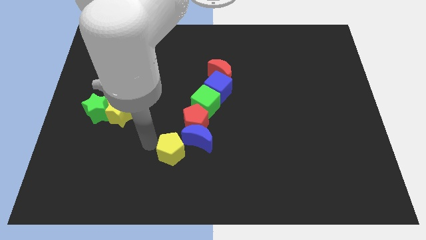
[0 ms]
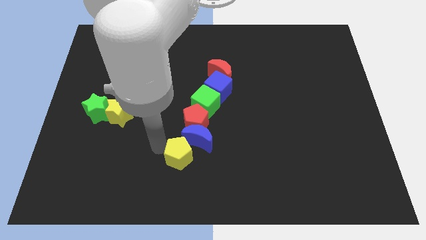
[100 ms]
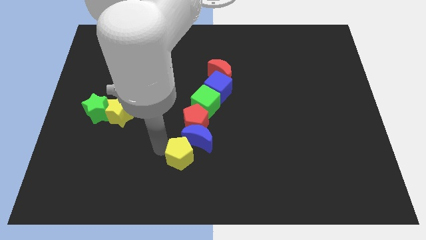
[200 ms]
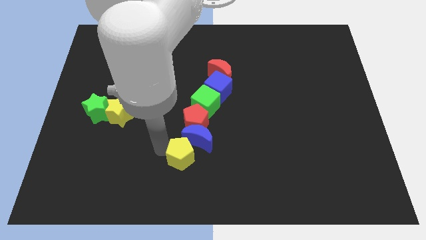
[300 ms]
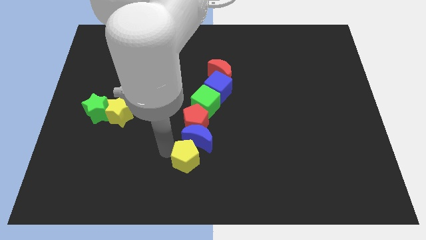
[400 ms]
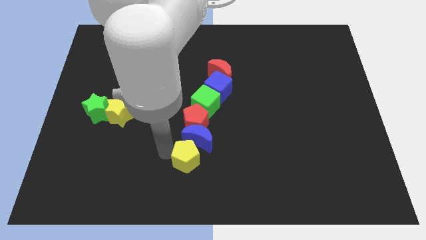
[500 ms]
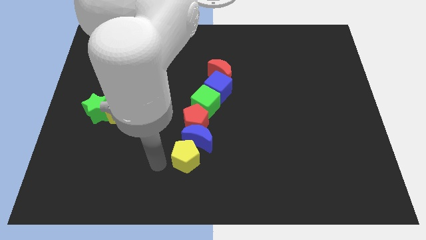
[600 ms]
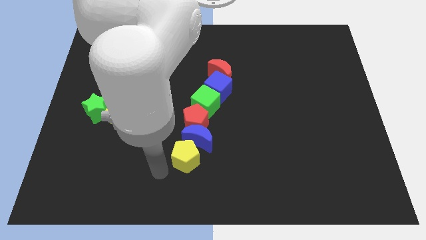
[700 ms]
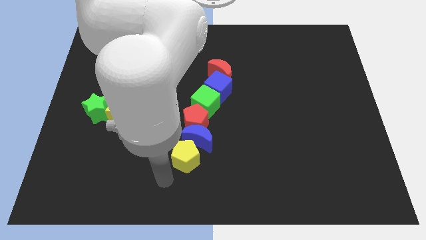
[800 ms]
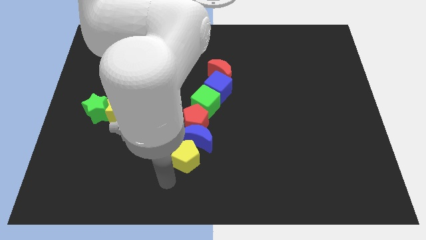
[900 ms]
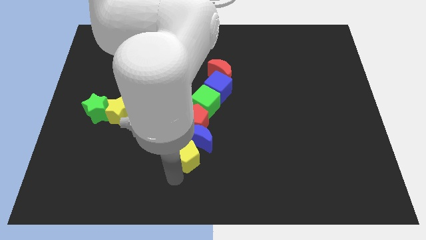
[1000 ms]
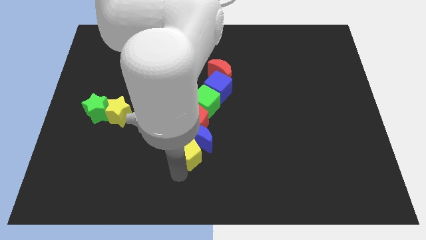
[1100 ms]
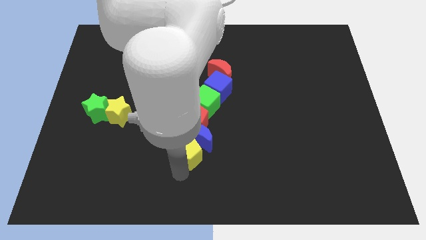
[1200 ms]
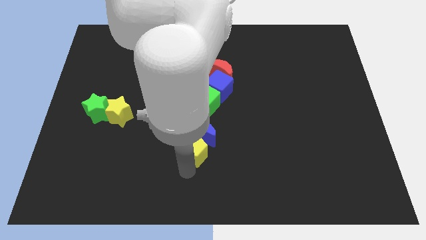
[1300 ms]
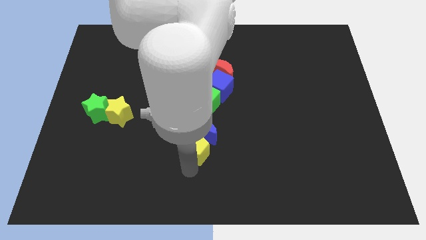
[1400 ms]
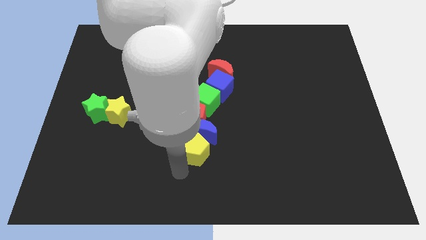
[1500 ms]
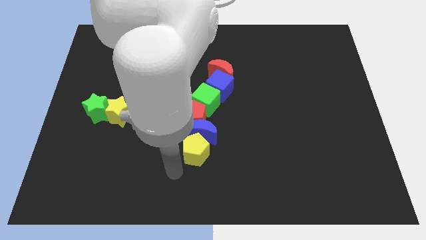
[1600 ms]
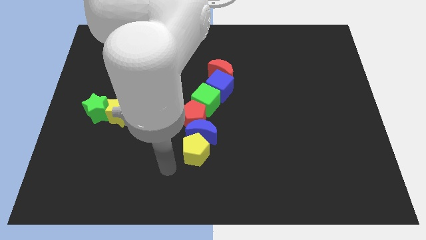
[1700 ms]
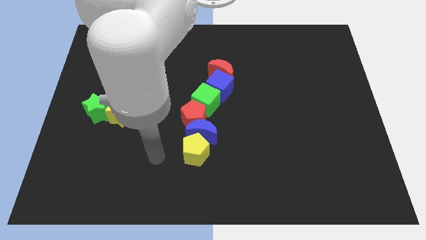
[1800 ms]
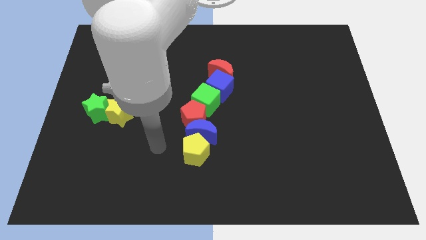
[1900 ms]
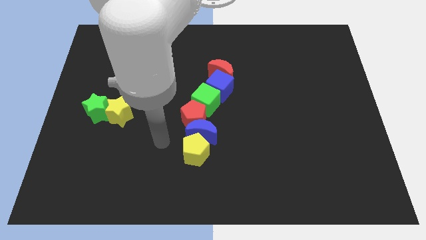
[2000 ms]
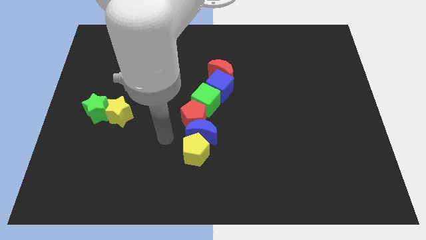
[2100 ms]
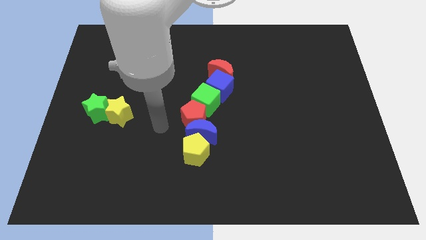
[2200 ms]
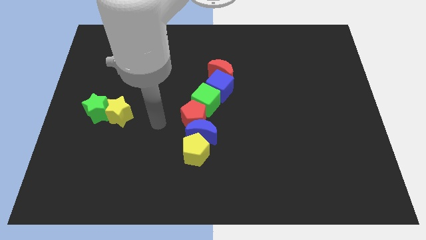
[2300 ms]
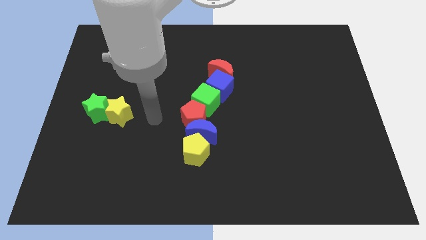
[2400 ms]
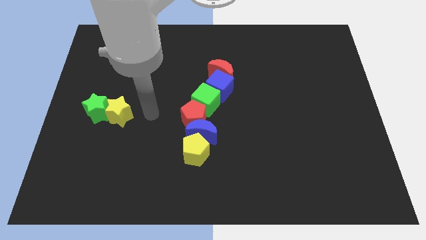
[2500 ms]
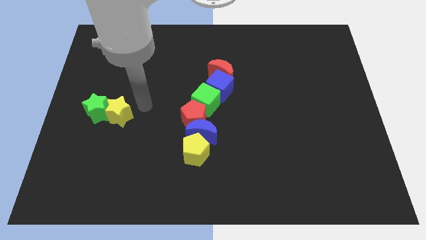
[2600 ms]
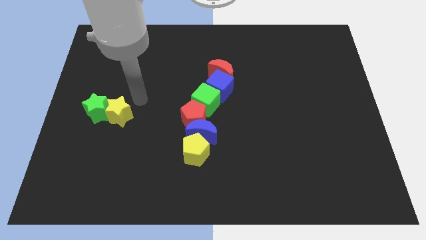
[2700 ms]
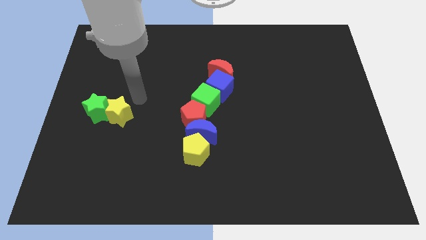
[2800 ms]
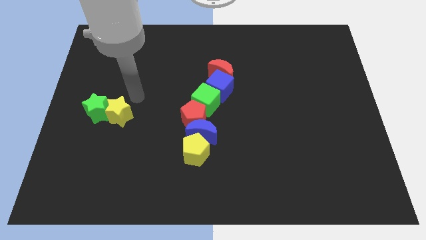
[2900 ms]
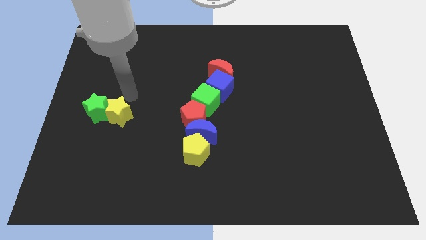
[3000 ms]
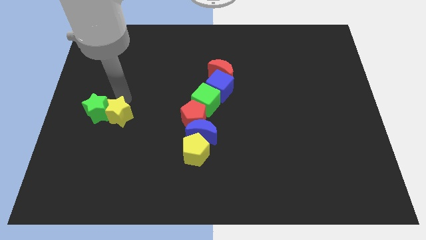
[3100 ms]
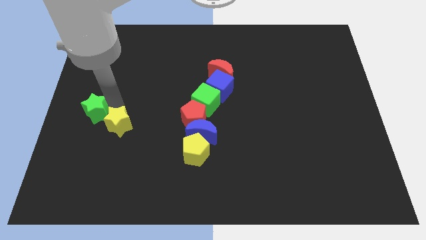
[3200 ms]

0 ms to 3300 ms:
push the group of blocks towards the top side

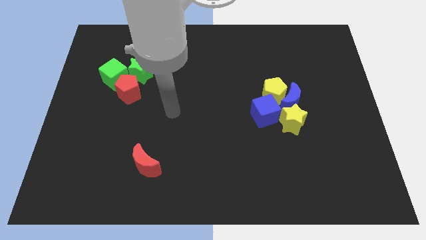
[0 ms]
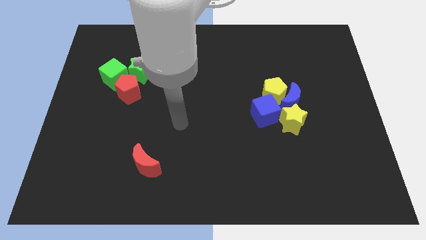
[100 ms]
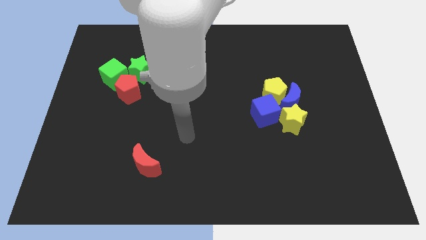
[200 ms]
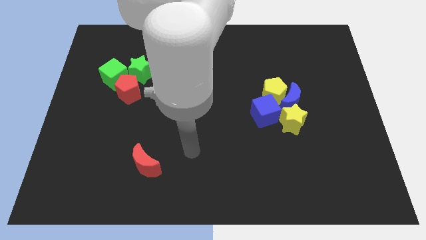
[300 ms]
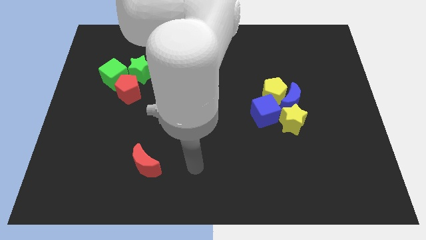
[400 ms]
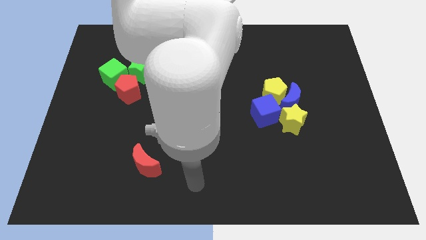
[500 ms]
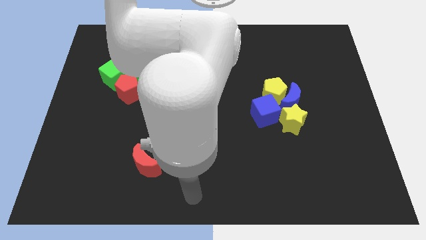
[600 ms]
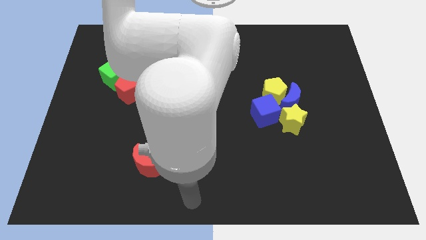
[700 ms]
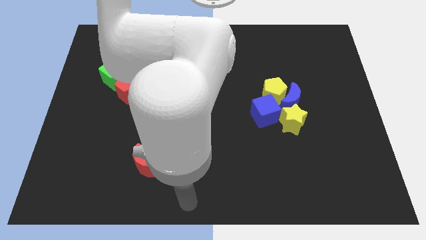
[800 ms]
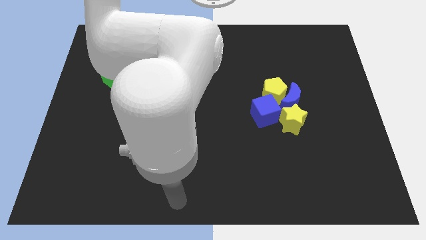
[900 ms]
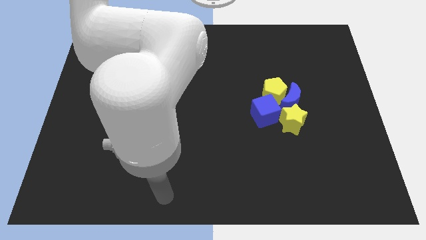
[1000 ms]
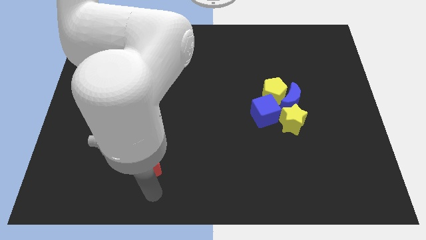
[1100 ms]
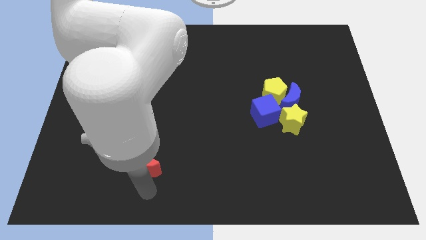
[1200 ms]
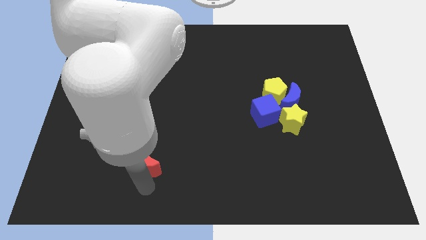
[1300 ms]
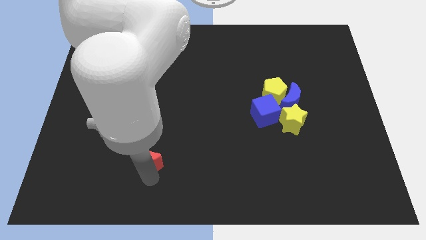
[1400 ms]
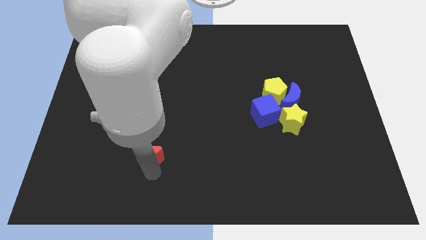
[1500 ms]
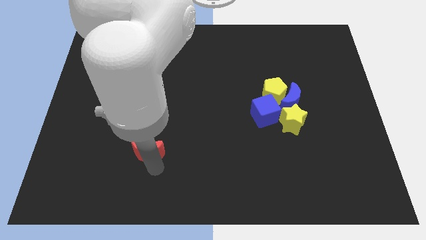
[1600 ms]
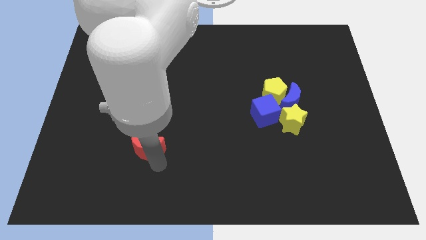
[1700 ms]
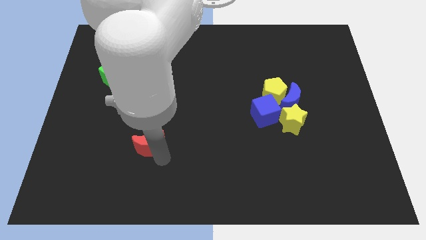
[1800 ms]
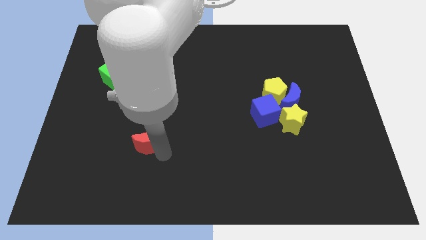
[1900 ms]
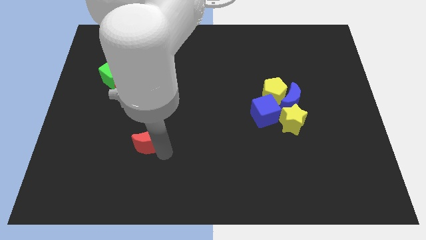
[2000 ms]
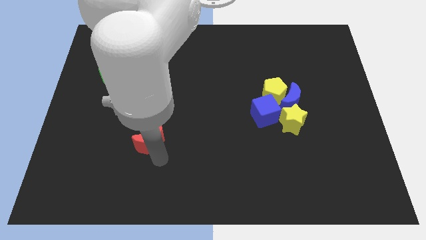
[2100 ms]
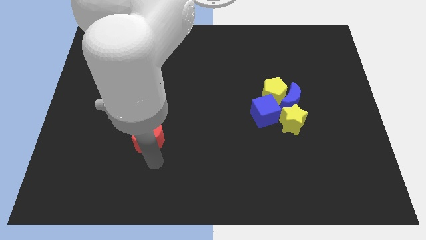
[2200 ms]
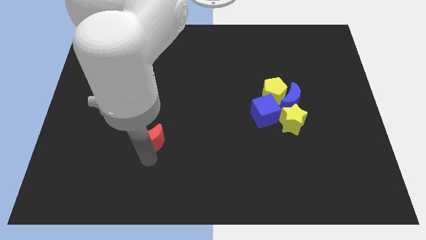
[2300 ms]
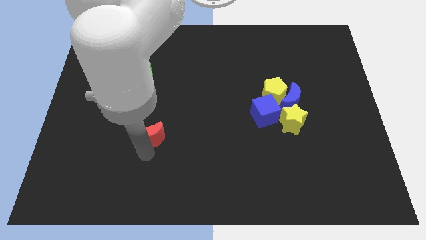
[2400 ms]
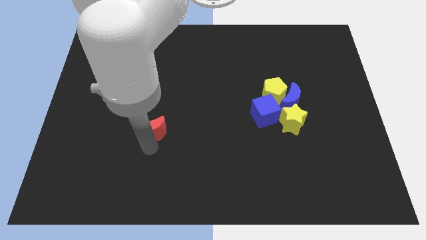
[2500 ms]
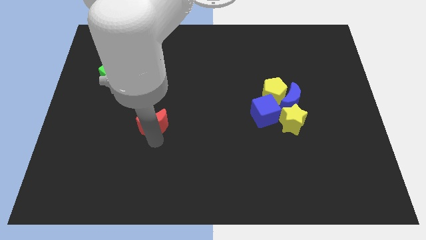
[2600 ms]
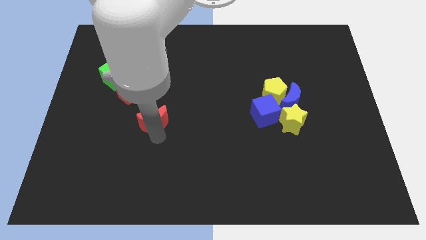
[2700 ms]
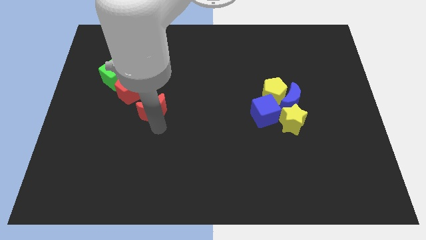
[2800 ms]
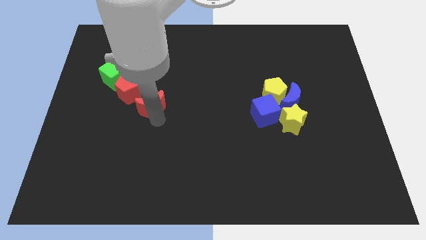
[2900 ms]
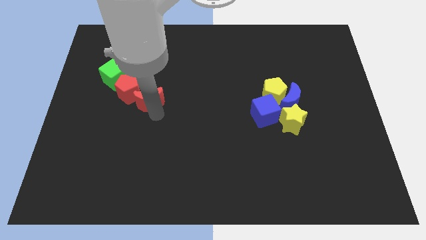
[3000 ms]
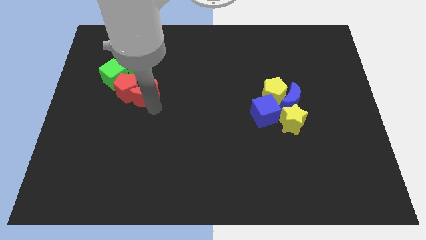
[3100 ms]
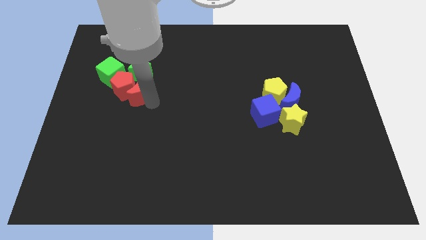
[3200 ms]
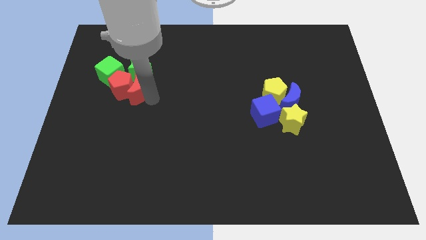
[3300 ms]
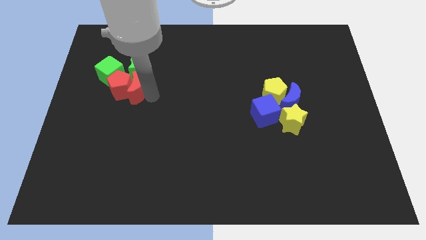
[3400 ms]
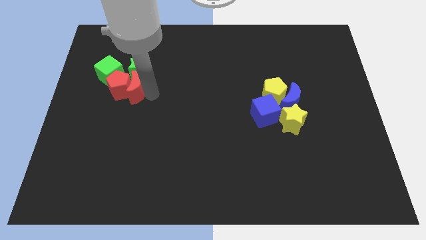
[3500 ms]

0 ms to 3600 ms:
move the red crescent into the group of blocks at the left side of the table

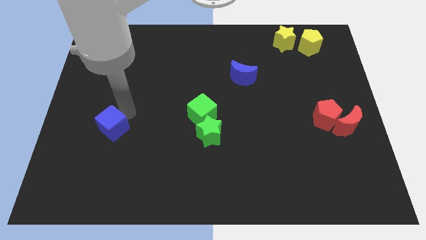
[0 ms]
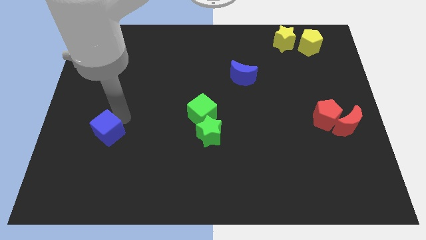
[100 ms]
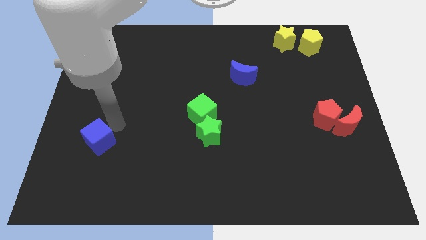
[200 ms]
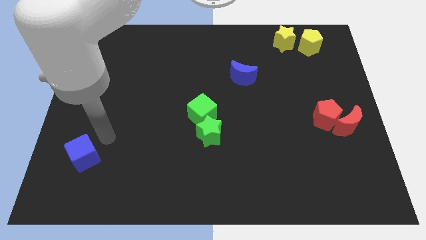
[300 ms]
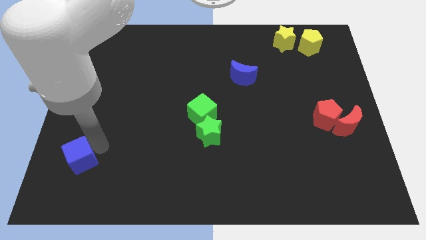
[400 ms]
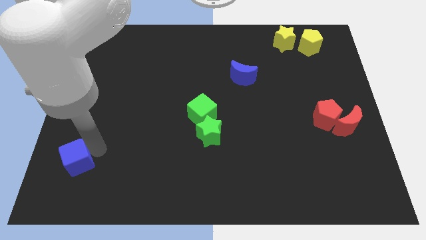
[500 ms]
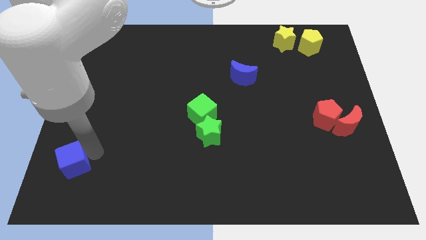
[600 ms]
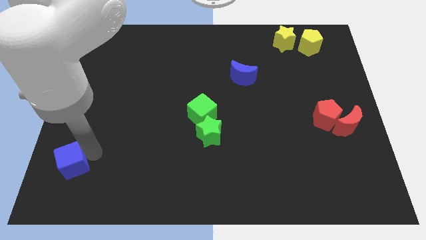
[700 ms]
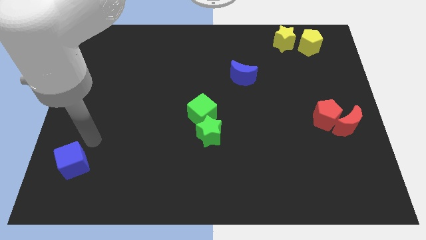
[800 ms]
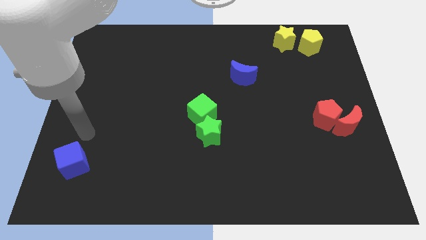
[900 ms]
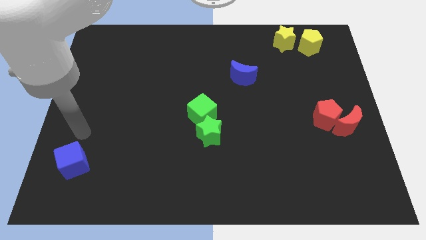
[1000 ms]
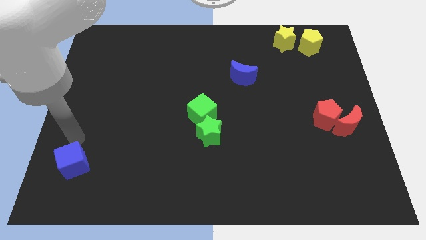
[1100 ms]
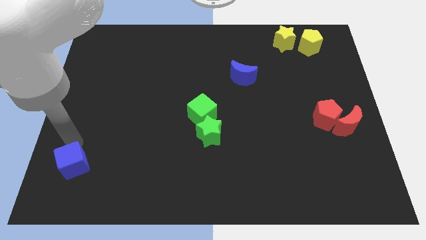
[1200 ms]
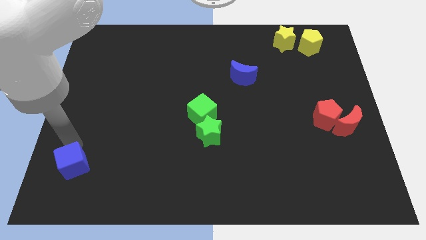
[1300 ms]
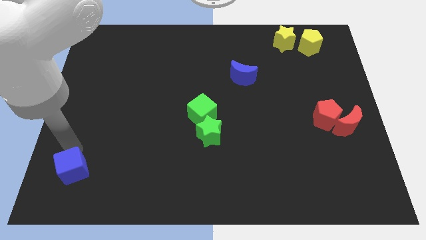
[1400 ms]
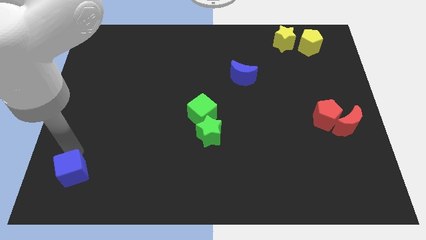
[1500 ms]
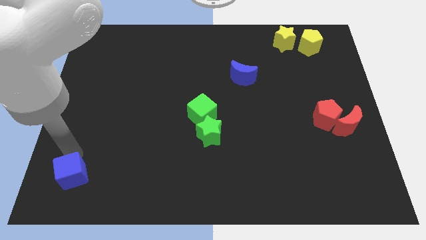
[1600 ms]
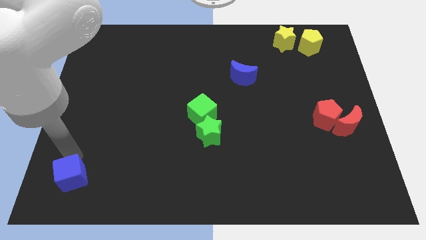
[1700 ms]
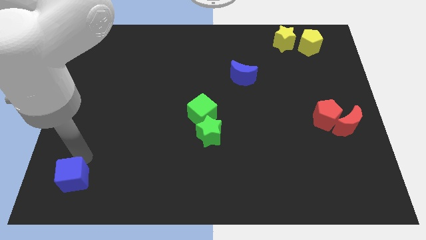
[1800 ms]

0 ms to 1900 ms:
push the blue cube to the bottom left
